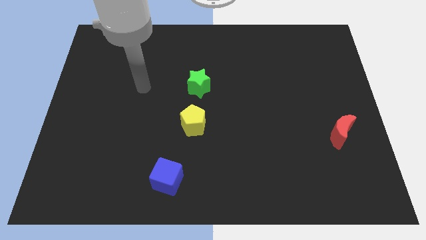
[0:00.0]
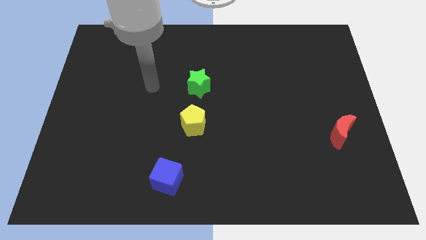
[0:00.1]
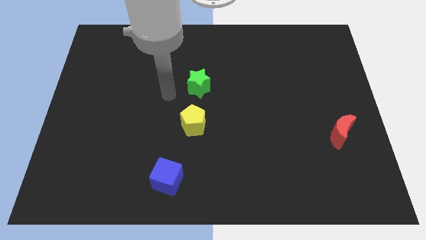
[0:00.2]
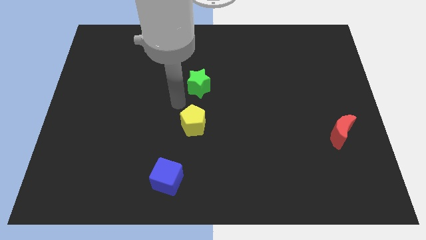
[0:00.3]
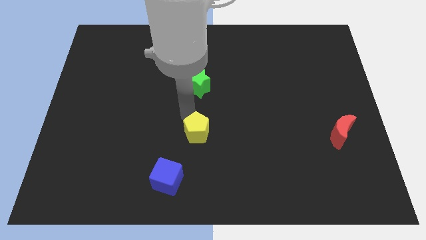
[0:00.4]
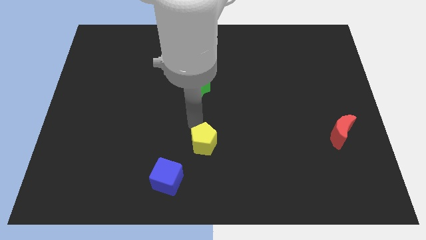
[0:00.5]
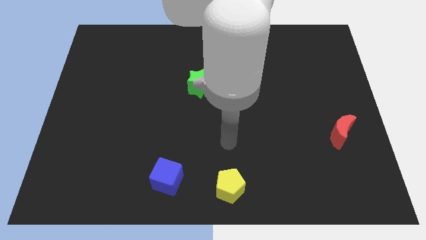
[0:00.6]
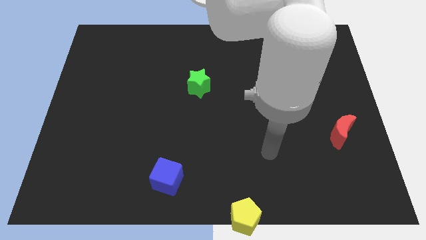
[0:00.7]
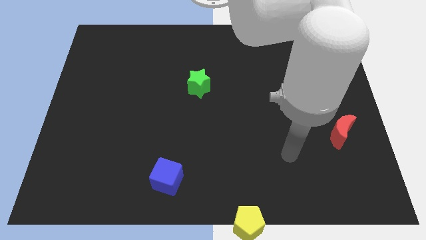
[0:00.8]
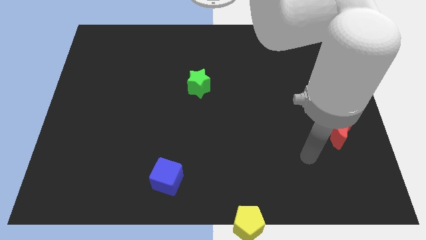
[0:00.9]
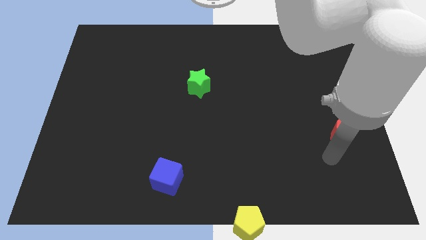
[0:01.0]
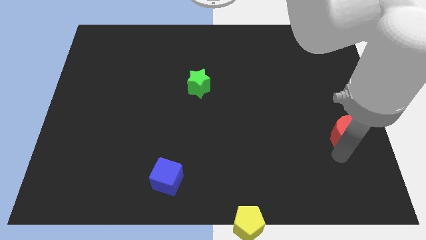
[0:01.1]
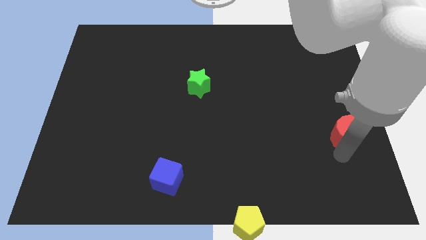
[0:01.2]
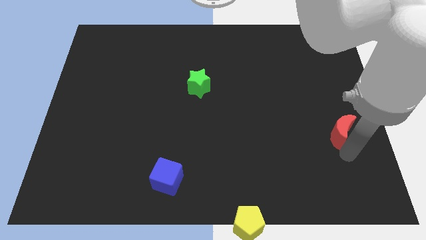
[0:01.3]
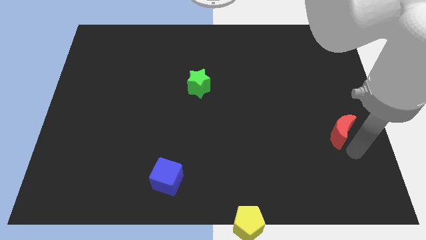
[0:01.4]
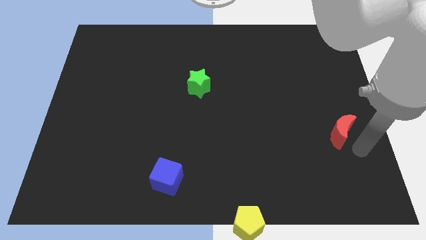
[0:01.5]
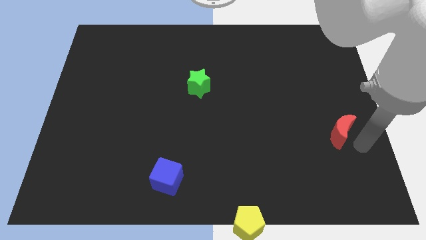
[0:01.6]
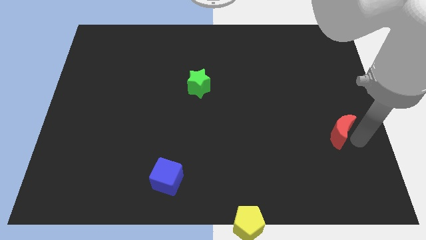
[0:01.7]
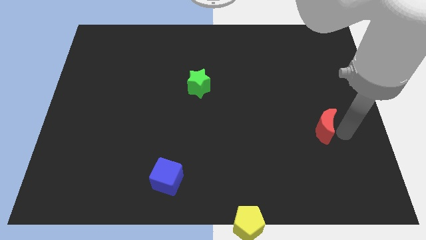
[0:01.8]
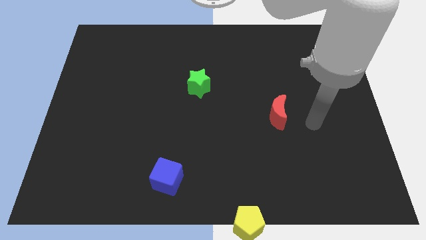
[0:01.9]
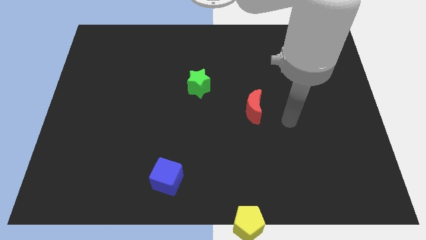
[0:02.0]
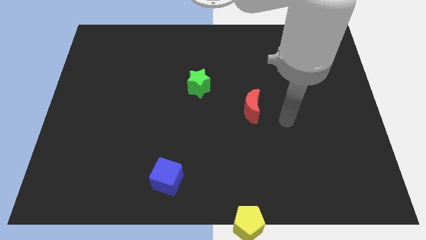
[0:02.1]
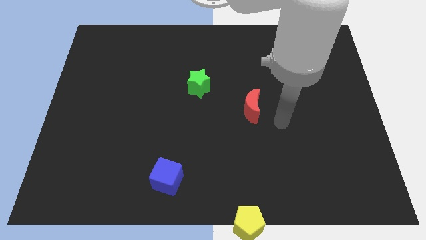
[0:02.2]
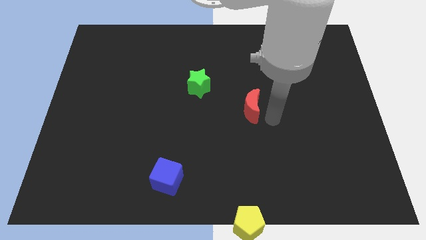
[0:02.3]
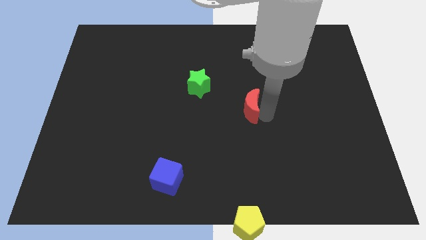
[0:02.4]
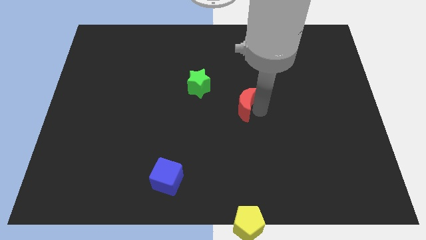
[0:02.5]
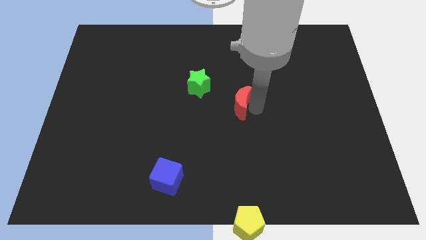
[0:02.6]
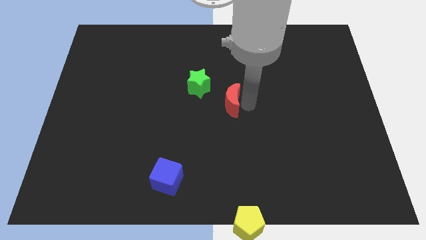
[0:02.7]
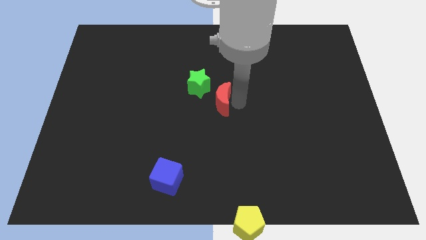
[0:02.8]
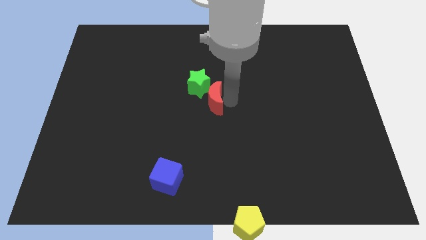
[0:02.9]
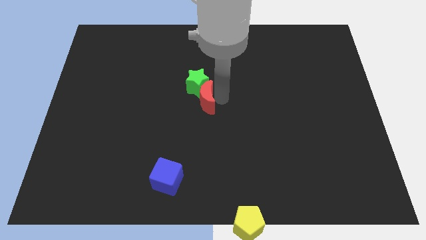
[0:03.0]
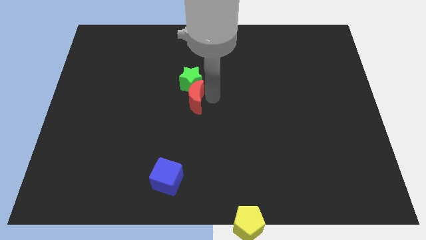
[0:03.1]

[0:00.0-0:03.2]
push the red block towards the green star

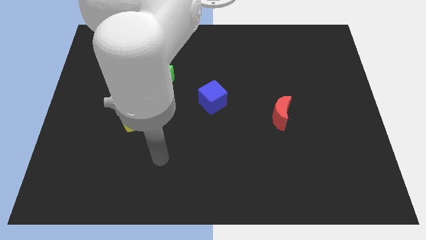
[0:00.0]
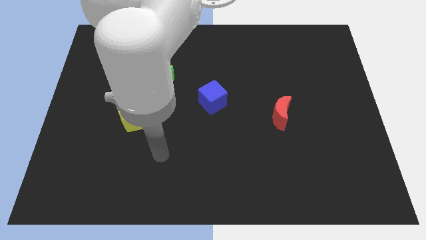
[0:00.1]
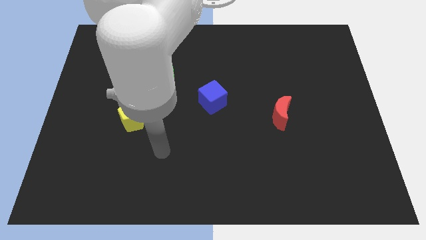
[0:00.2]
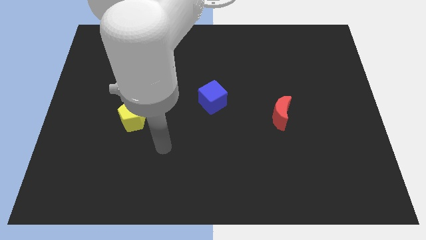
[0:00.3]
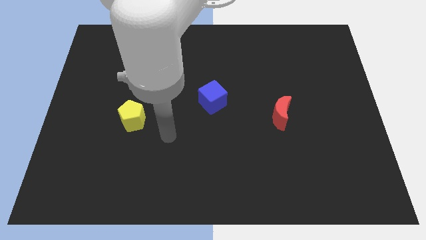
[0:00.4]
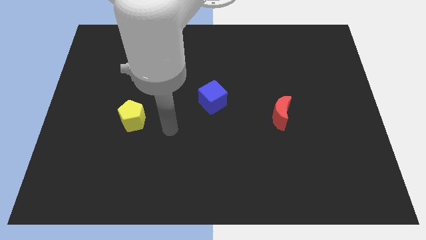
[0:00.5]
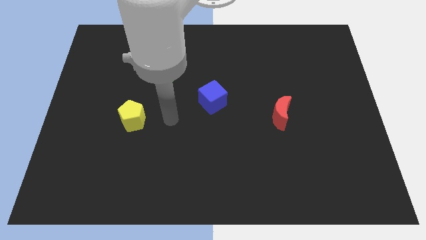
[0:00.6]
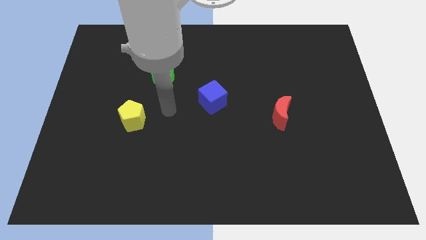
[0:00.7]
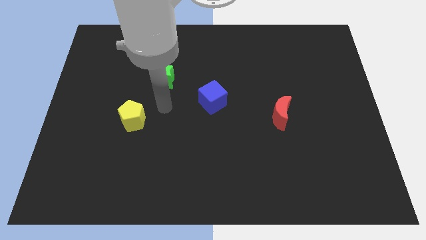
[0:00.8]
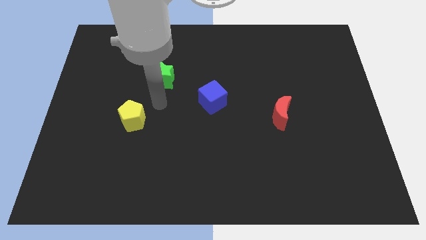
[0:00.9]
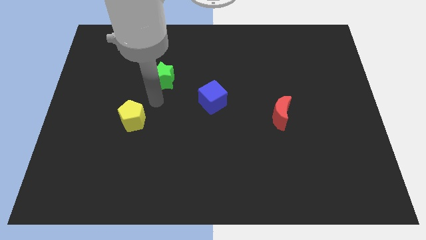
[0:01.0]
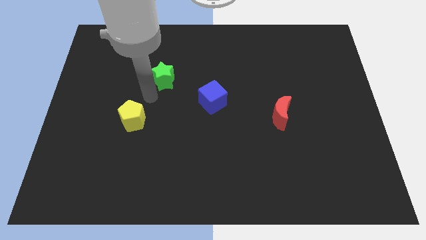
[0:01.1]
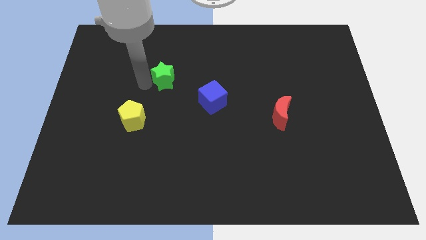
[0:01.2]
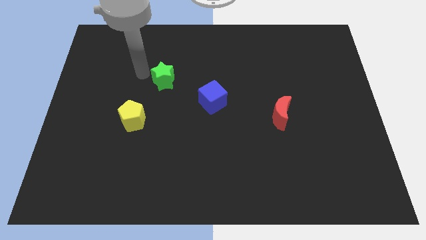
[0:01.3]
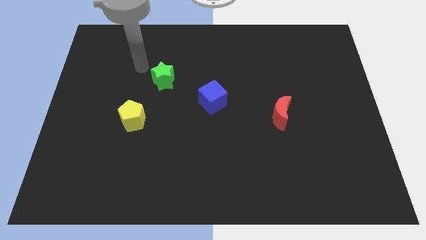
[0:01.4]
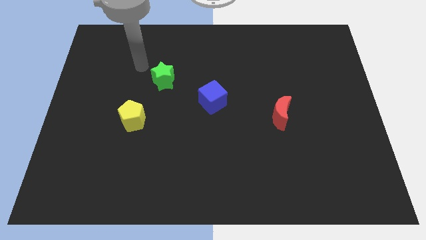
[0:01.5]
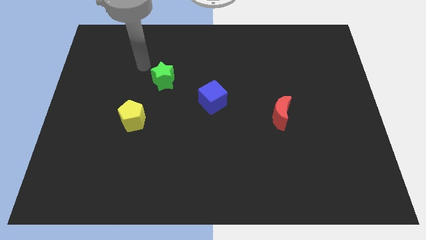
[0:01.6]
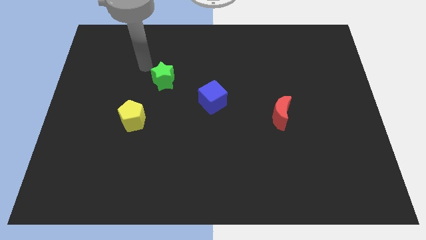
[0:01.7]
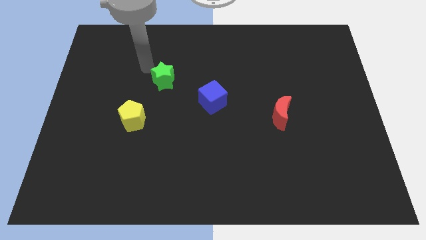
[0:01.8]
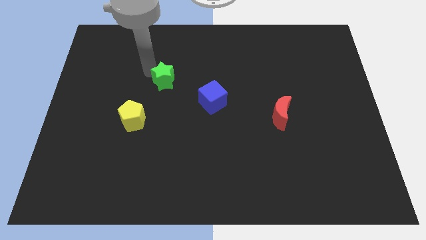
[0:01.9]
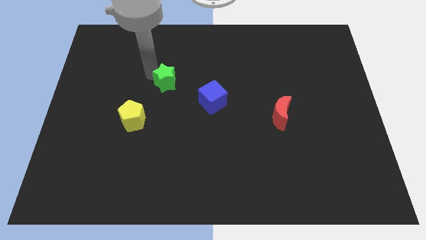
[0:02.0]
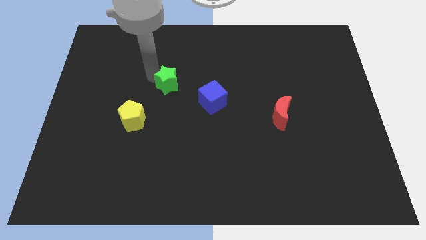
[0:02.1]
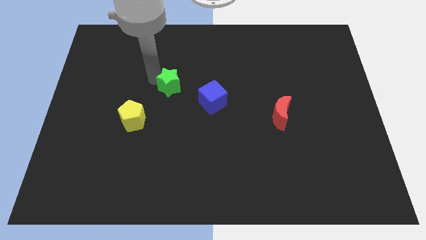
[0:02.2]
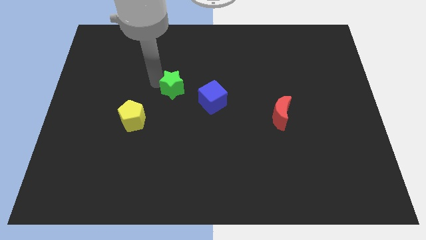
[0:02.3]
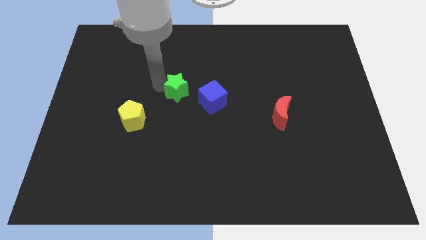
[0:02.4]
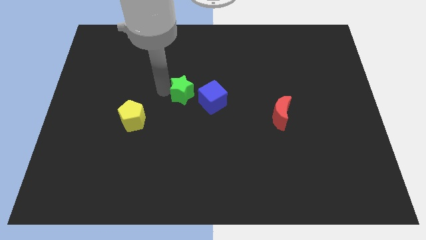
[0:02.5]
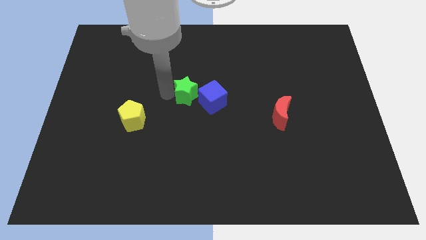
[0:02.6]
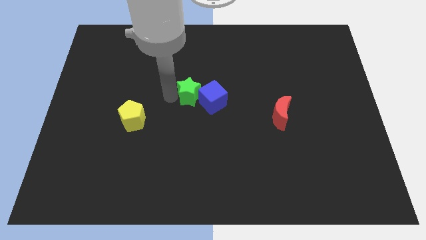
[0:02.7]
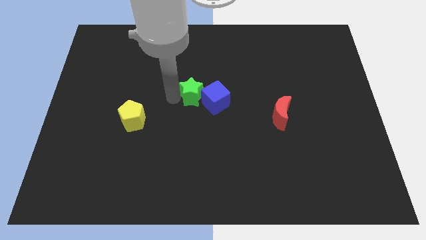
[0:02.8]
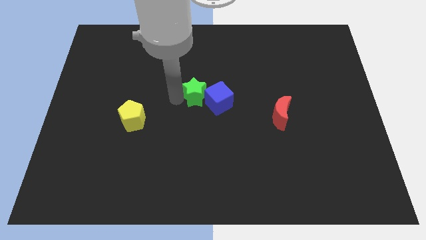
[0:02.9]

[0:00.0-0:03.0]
push the star close to the cube

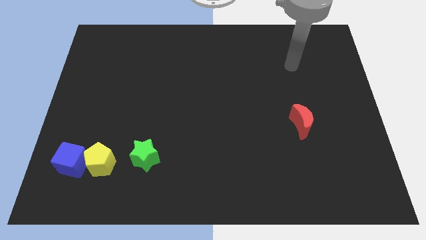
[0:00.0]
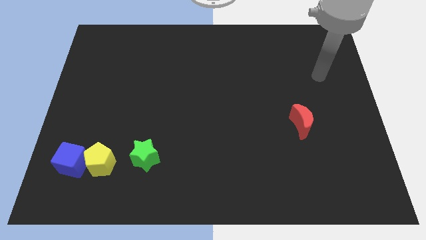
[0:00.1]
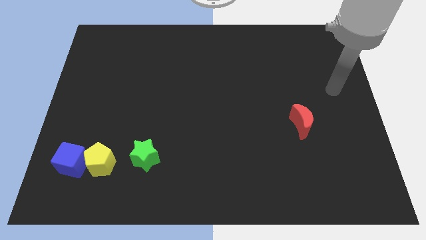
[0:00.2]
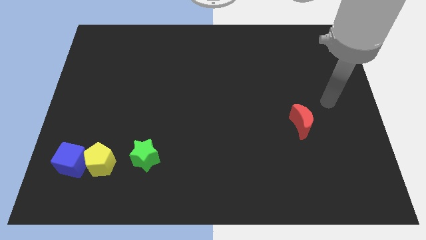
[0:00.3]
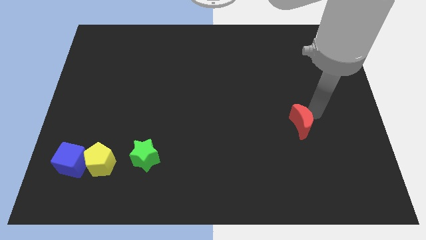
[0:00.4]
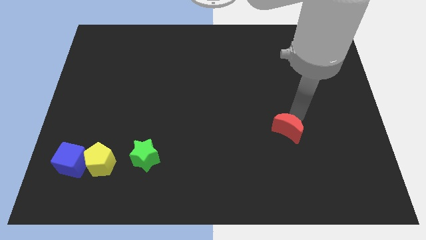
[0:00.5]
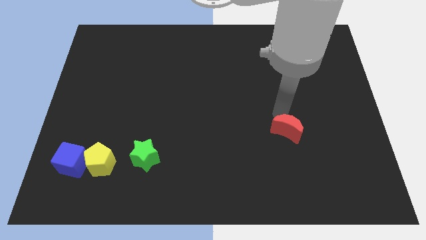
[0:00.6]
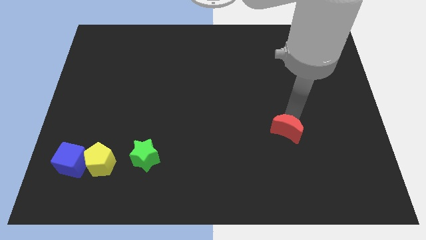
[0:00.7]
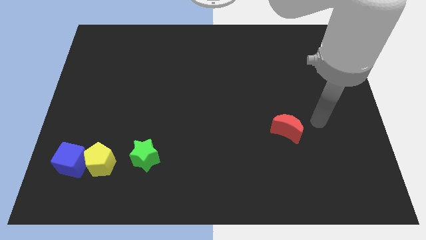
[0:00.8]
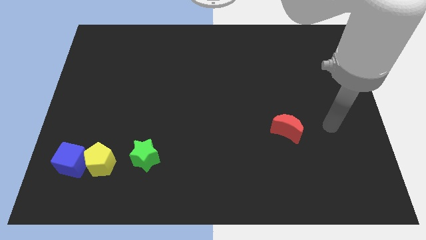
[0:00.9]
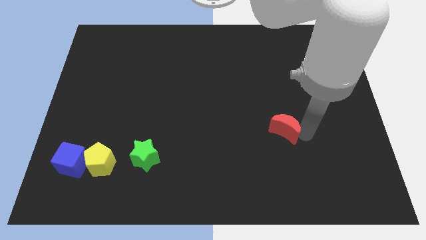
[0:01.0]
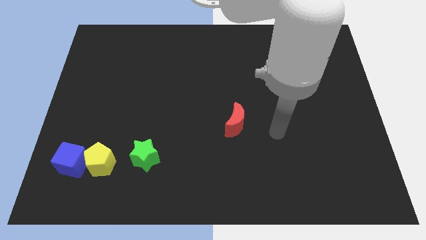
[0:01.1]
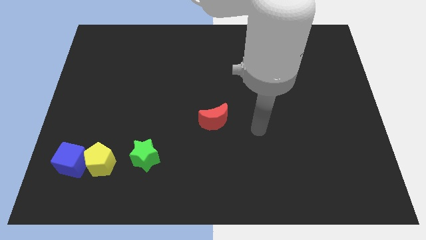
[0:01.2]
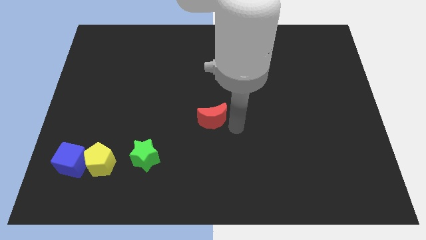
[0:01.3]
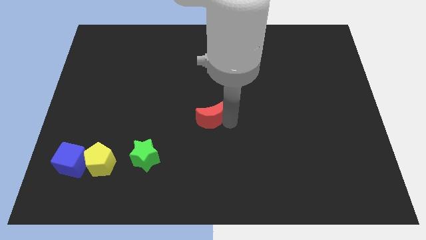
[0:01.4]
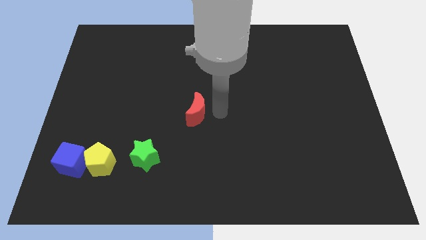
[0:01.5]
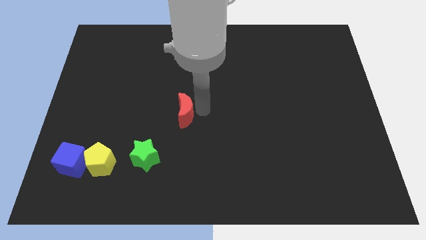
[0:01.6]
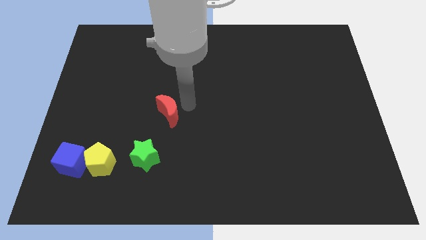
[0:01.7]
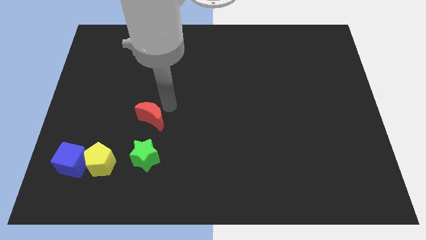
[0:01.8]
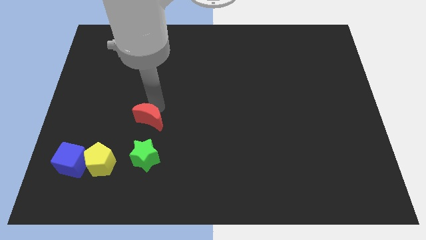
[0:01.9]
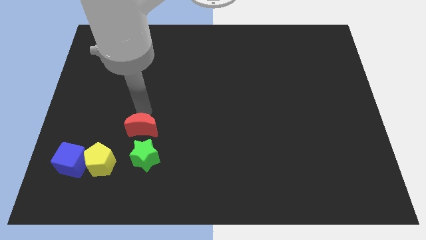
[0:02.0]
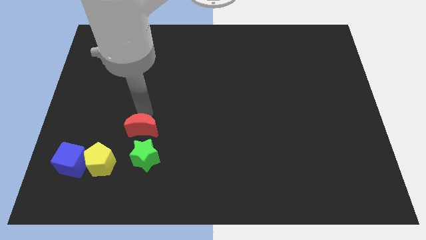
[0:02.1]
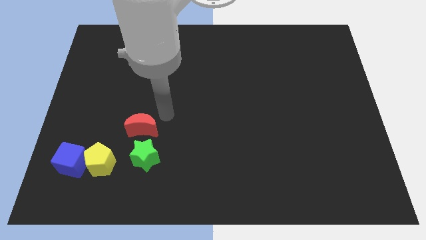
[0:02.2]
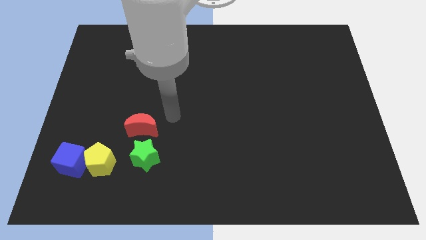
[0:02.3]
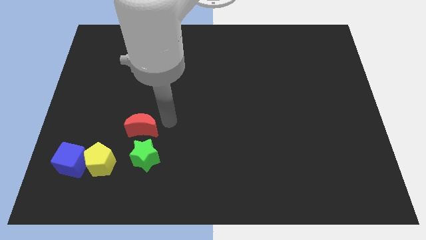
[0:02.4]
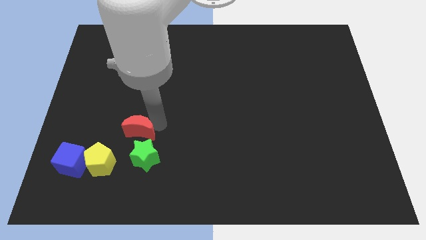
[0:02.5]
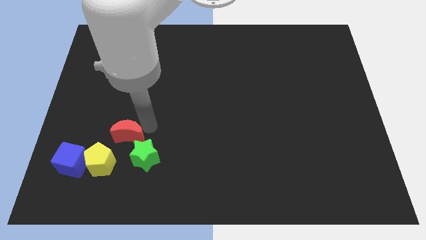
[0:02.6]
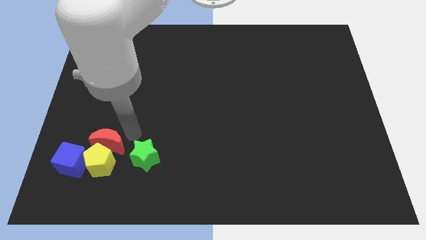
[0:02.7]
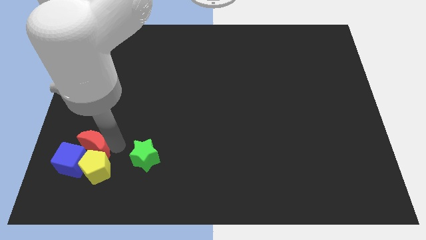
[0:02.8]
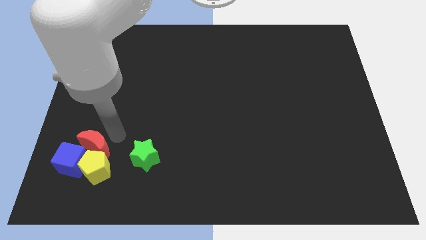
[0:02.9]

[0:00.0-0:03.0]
move the red block next to the yellow block
